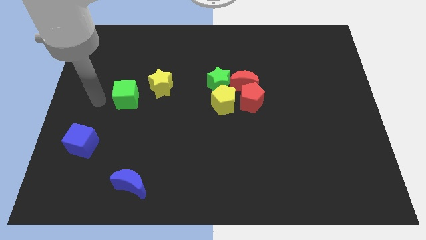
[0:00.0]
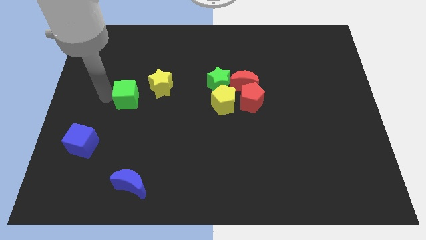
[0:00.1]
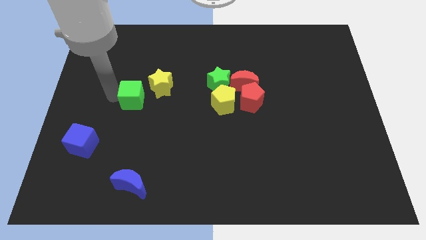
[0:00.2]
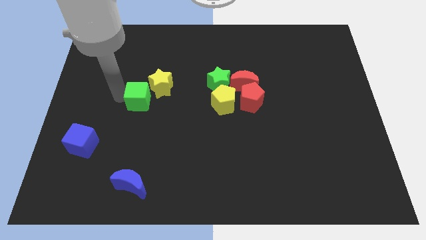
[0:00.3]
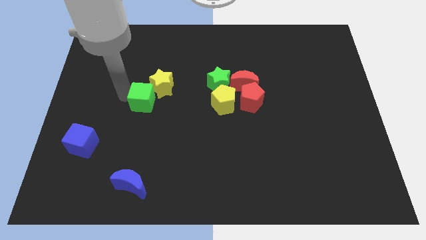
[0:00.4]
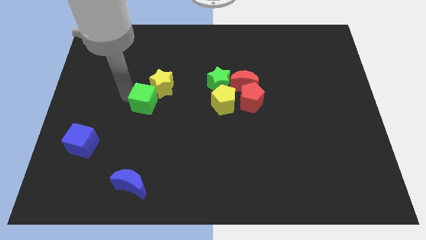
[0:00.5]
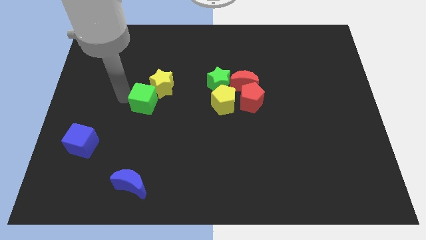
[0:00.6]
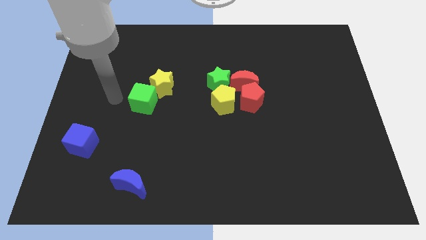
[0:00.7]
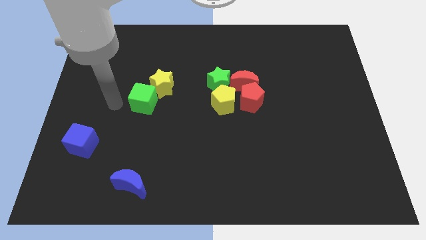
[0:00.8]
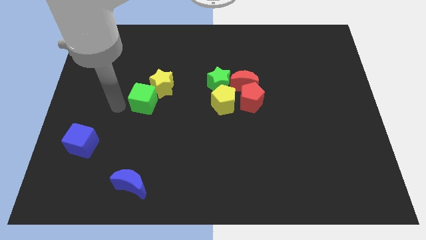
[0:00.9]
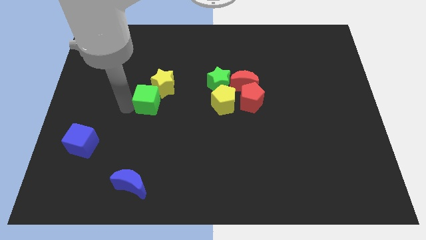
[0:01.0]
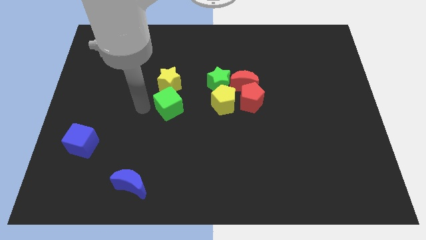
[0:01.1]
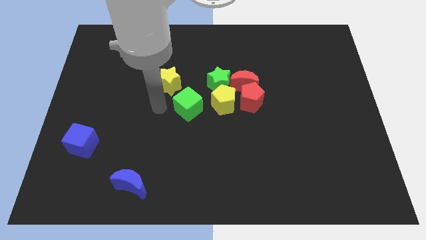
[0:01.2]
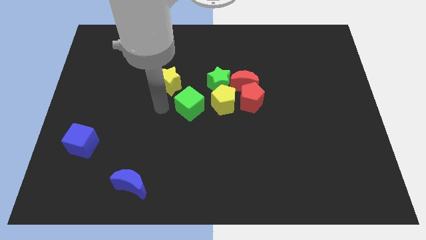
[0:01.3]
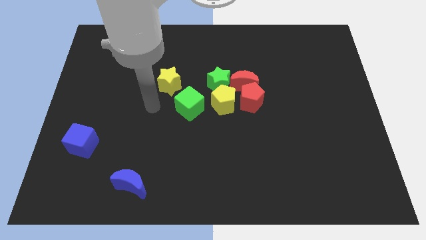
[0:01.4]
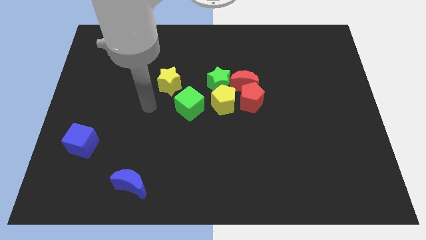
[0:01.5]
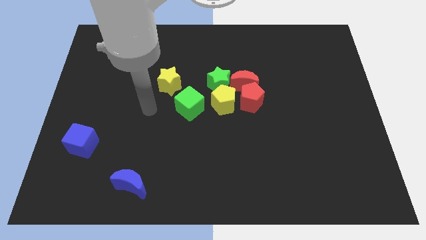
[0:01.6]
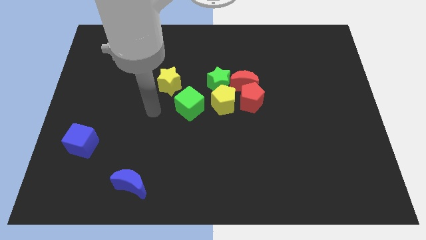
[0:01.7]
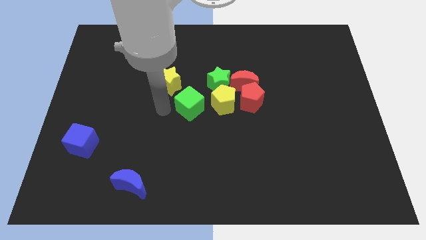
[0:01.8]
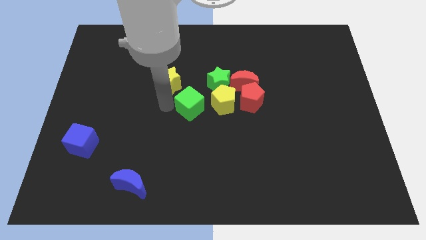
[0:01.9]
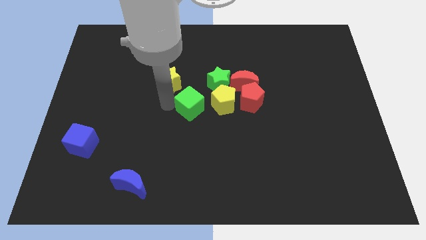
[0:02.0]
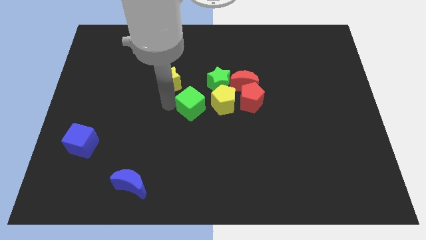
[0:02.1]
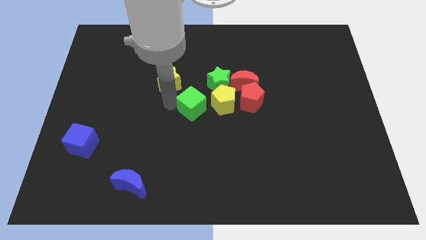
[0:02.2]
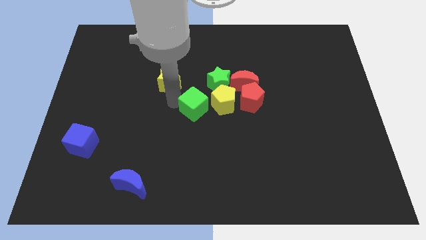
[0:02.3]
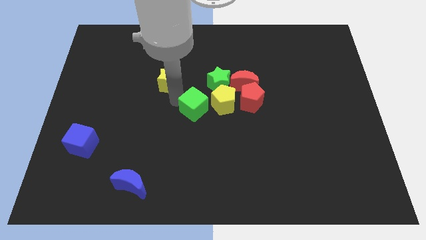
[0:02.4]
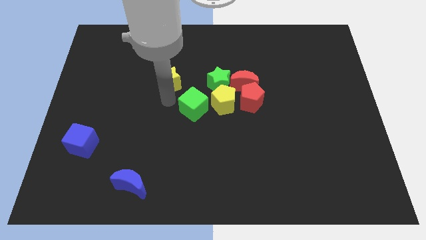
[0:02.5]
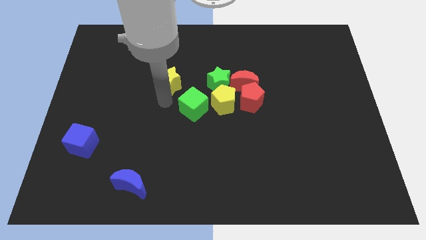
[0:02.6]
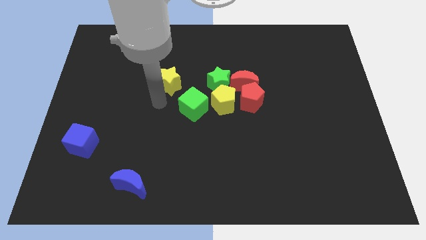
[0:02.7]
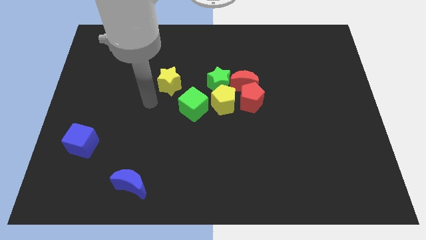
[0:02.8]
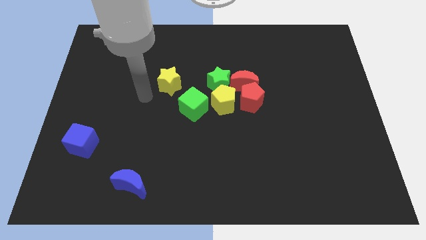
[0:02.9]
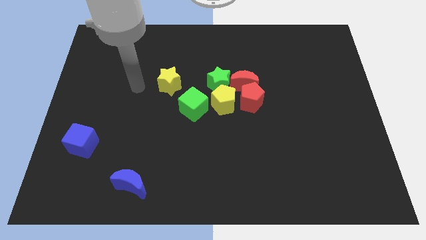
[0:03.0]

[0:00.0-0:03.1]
move the green cube towards the left side of the yellow pentagon

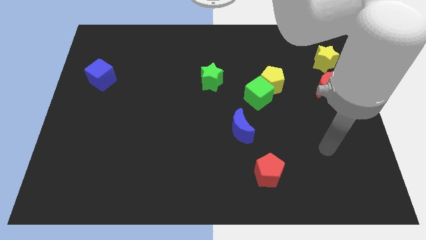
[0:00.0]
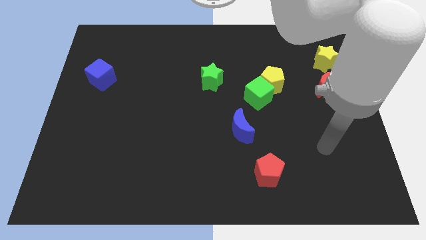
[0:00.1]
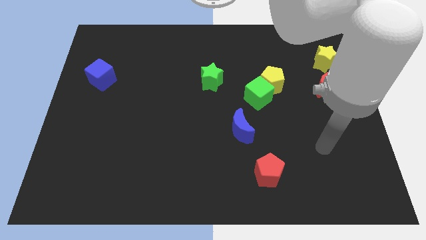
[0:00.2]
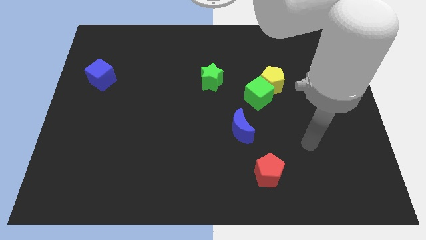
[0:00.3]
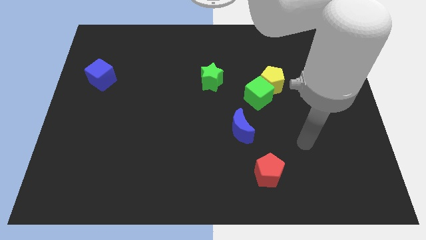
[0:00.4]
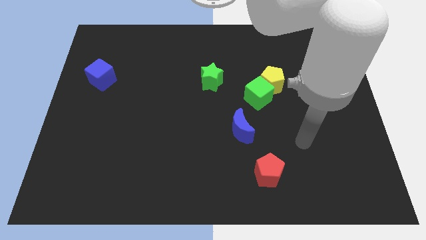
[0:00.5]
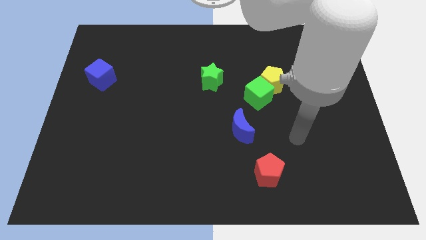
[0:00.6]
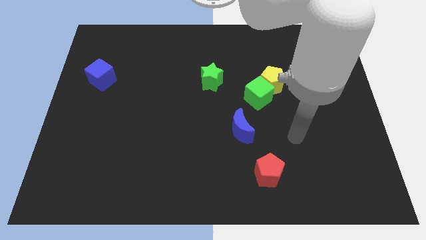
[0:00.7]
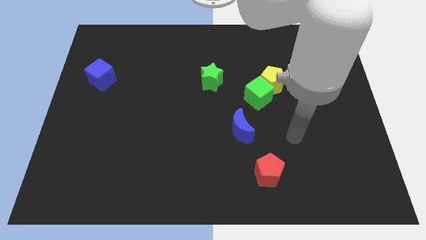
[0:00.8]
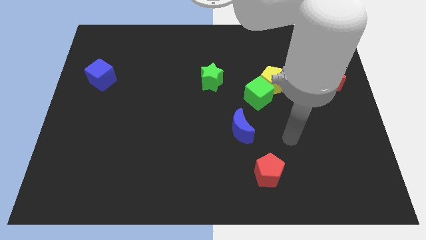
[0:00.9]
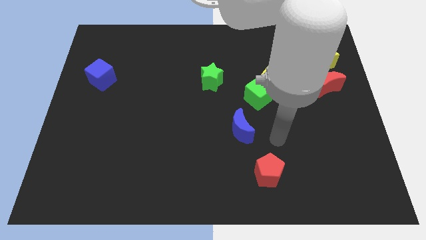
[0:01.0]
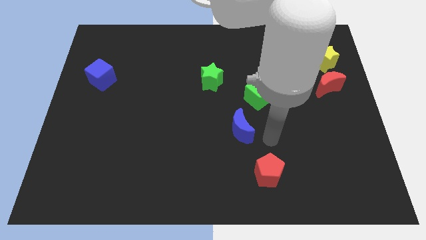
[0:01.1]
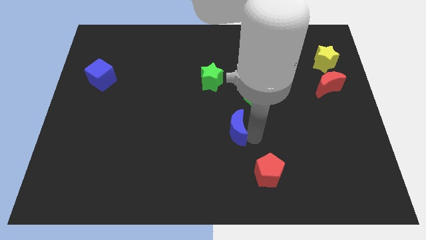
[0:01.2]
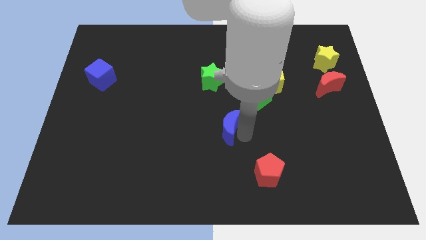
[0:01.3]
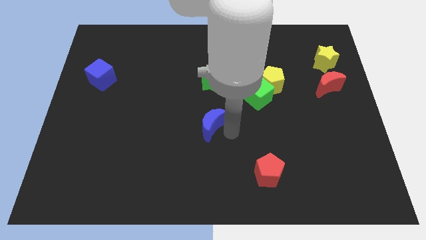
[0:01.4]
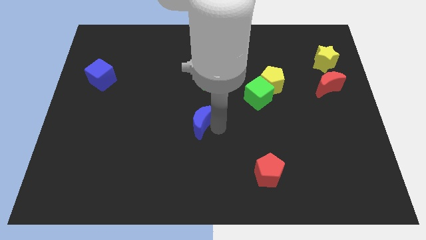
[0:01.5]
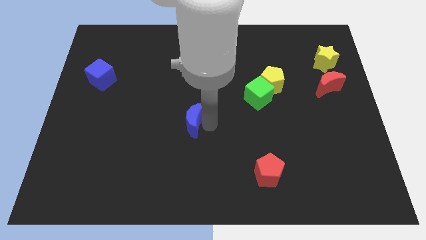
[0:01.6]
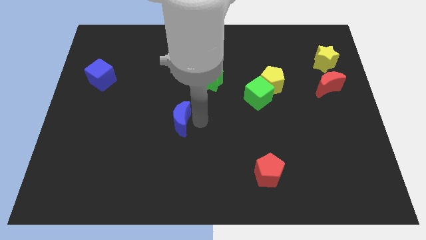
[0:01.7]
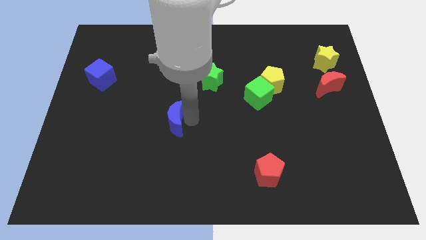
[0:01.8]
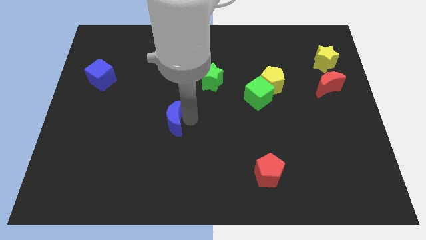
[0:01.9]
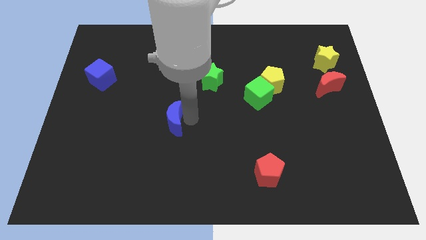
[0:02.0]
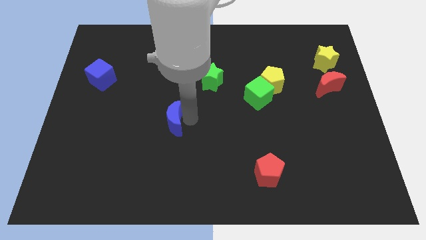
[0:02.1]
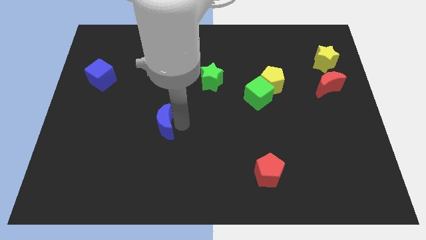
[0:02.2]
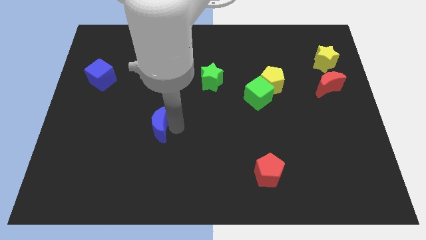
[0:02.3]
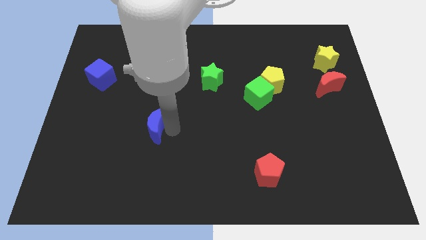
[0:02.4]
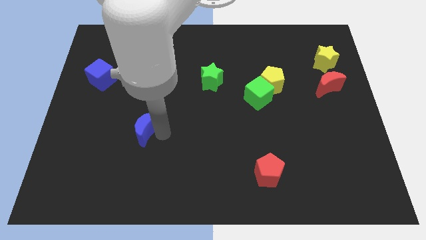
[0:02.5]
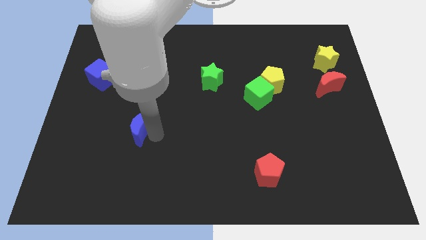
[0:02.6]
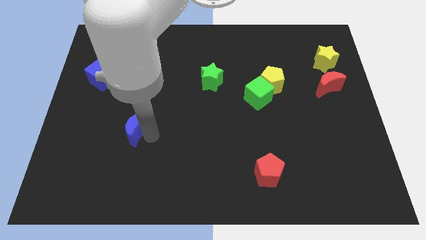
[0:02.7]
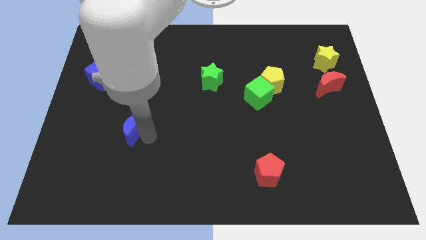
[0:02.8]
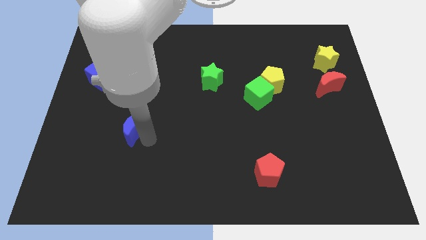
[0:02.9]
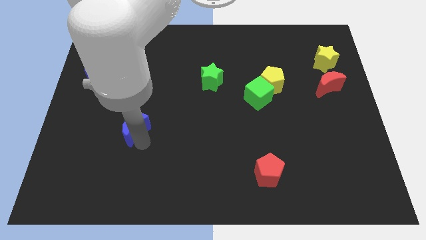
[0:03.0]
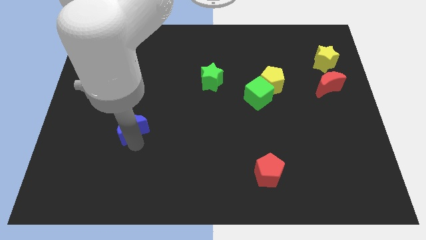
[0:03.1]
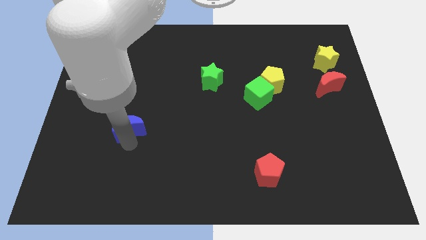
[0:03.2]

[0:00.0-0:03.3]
push the blue crescent to the bottom left of the green star

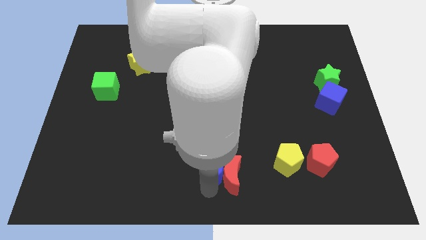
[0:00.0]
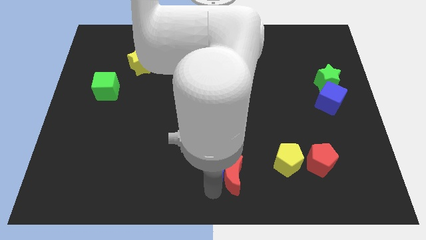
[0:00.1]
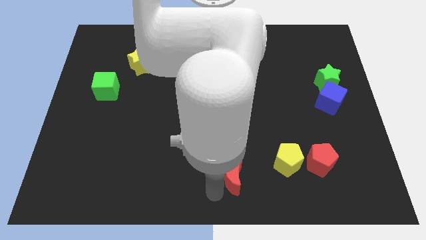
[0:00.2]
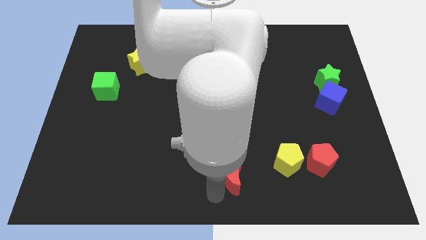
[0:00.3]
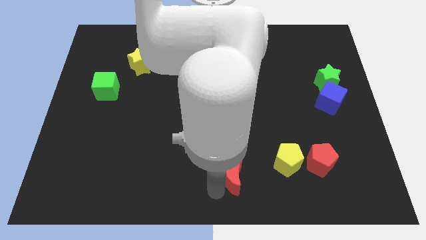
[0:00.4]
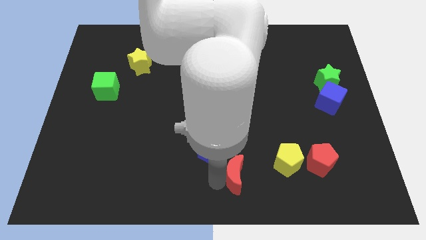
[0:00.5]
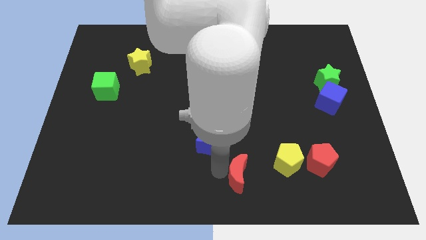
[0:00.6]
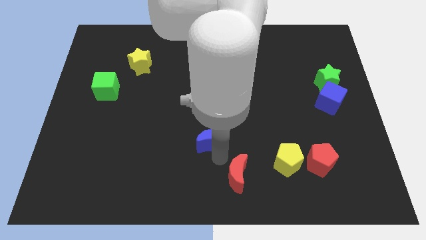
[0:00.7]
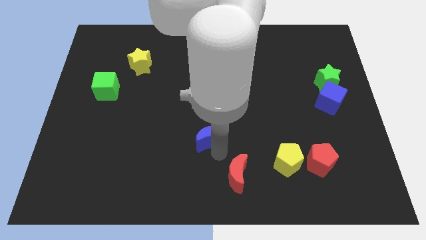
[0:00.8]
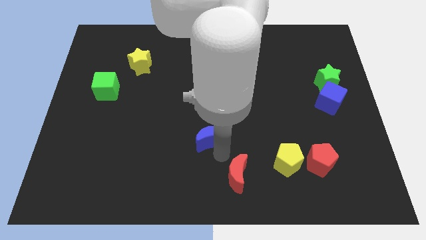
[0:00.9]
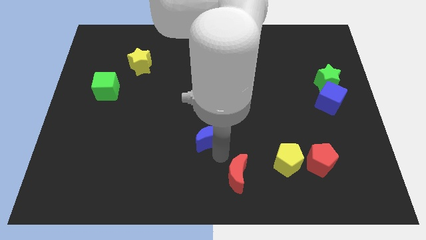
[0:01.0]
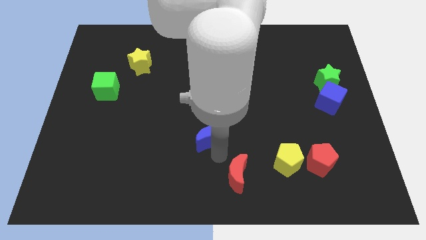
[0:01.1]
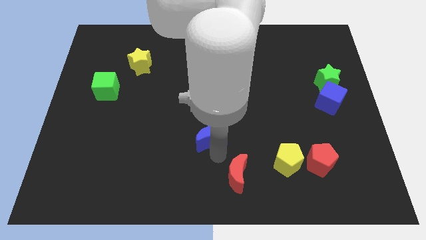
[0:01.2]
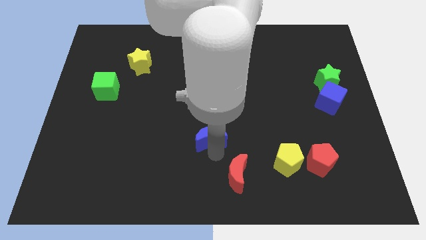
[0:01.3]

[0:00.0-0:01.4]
move the blue crescent away from the red crescent

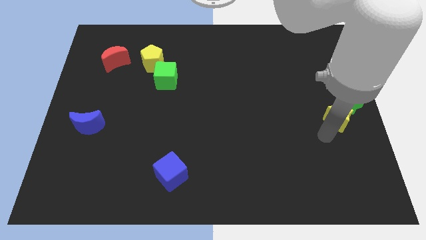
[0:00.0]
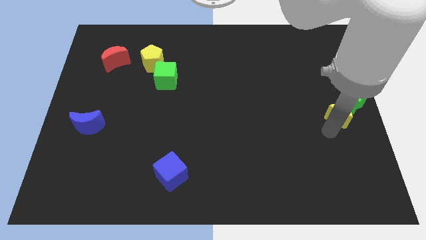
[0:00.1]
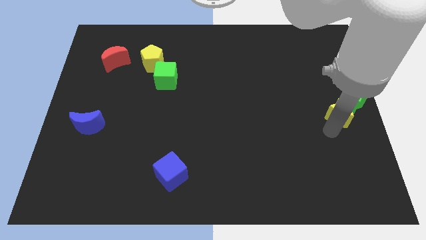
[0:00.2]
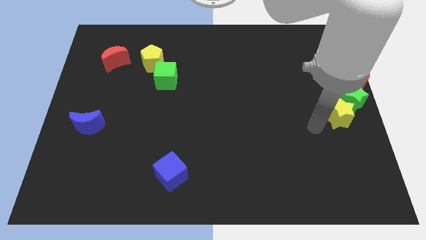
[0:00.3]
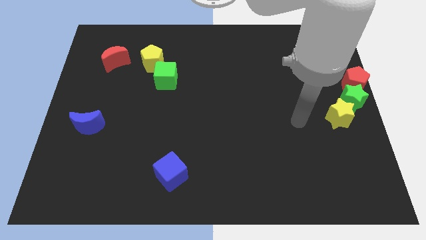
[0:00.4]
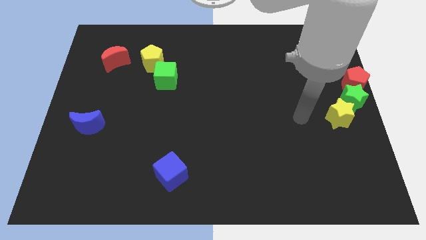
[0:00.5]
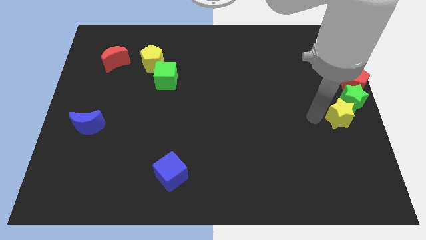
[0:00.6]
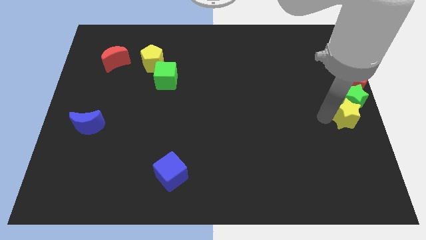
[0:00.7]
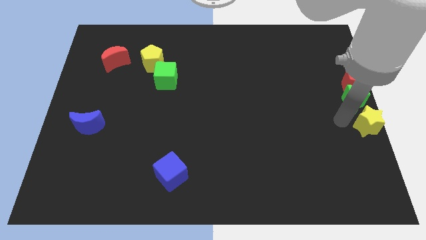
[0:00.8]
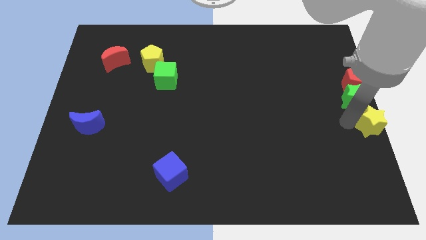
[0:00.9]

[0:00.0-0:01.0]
separate the yellow star away from the green star

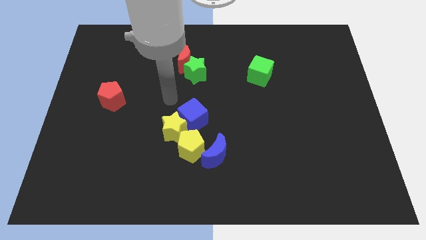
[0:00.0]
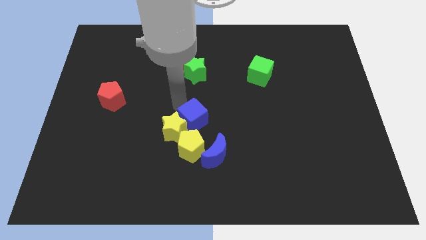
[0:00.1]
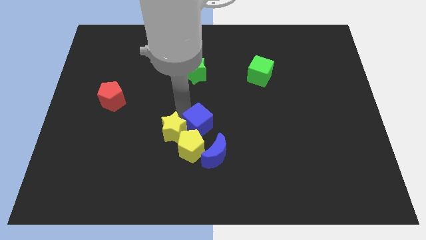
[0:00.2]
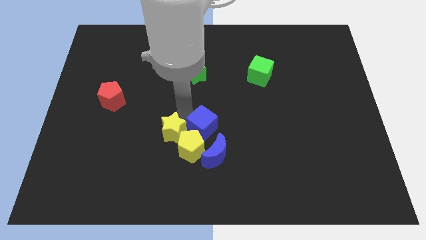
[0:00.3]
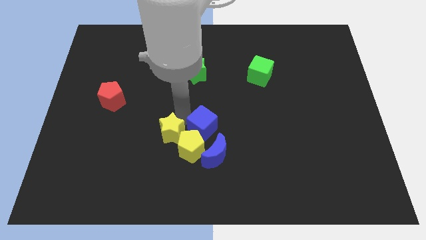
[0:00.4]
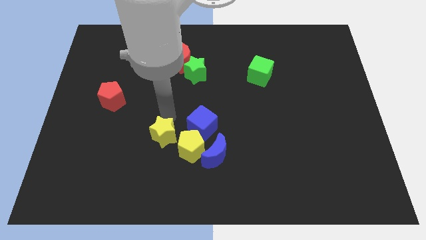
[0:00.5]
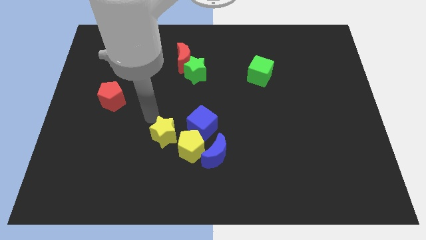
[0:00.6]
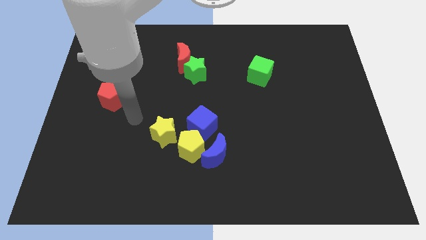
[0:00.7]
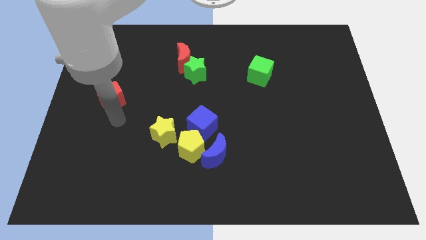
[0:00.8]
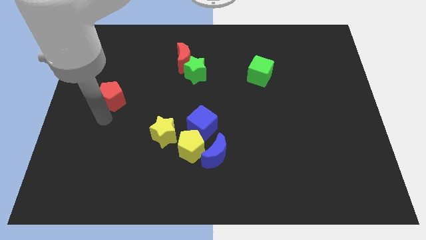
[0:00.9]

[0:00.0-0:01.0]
place blue cube to the top of yellow pentagon
